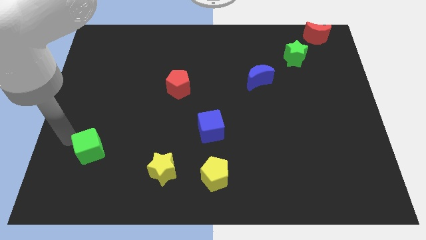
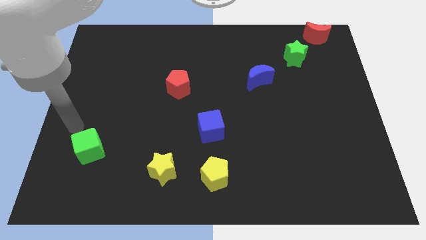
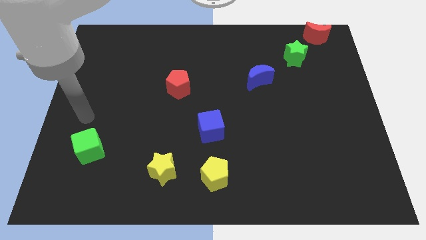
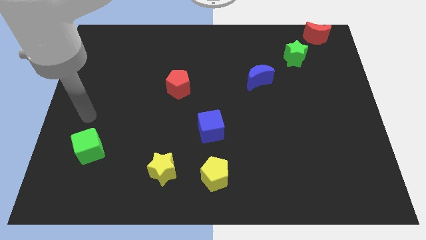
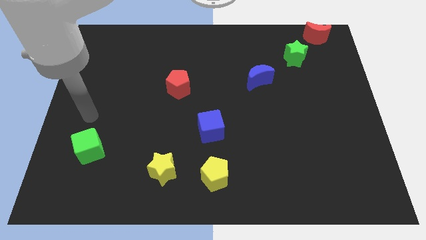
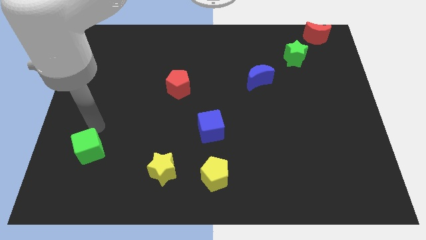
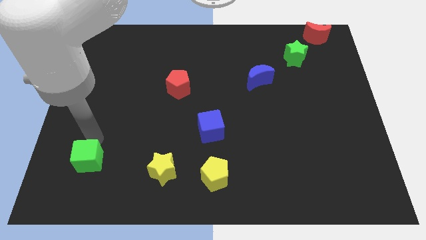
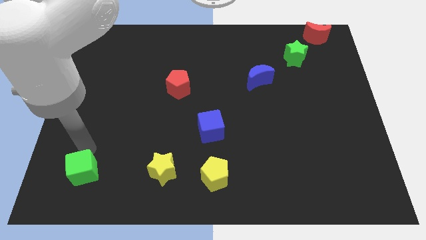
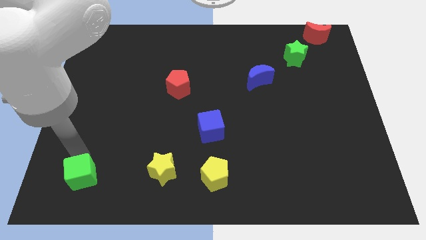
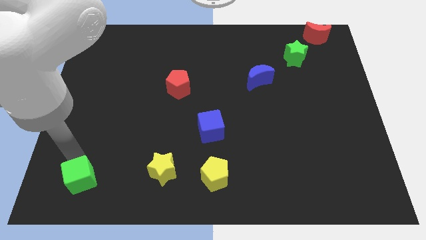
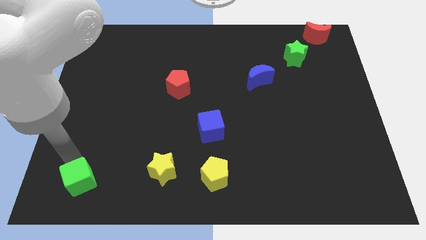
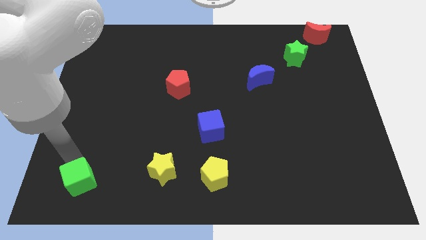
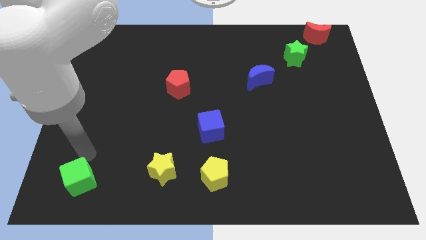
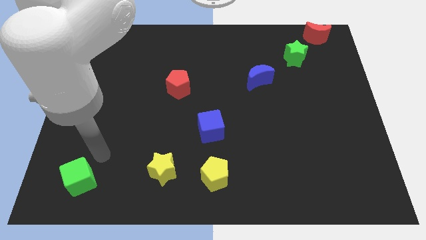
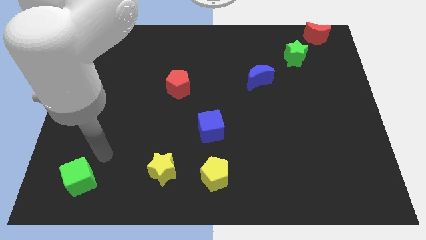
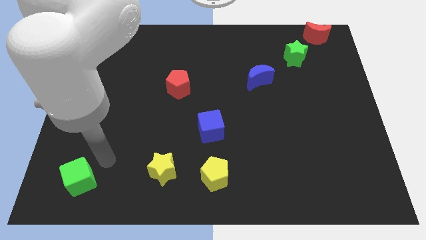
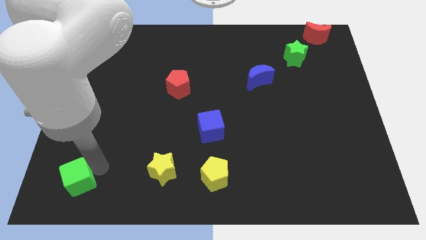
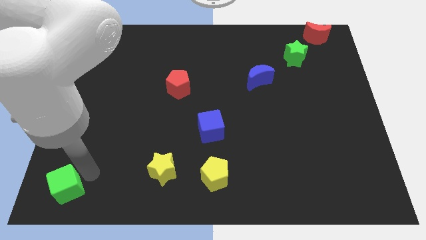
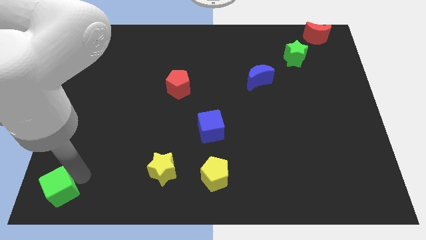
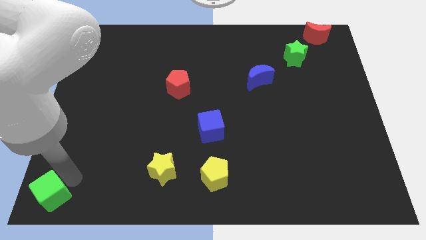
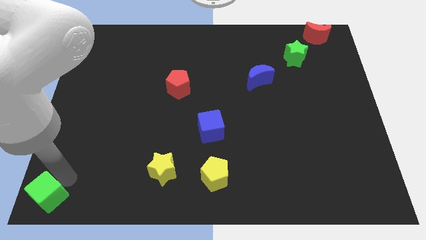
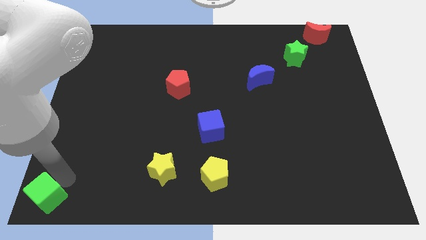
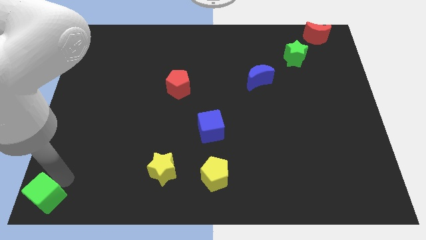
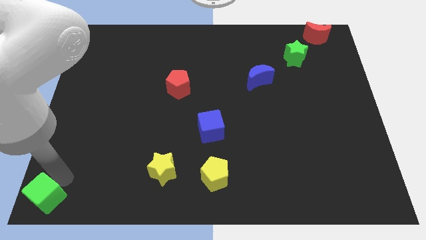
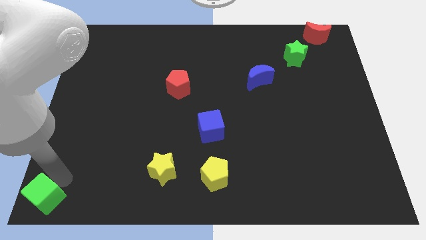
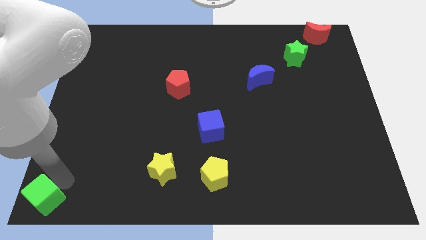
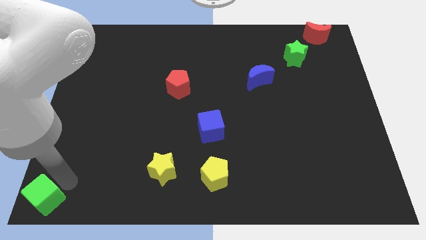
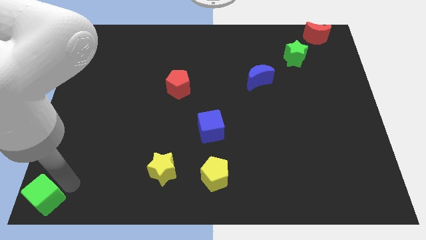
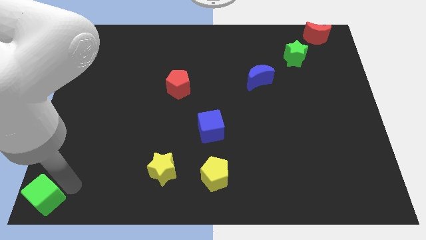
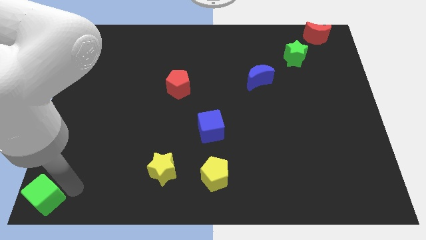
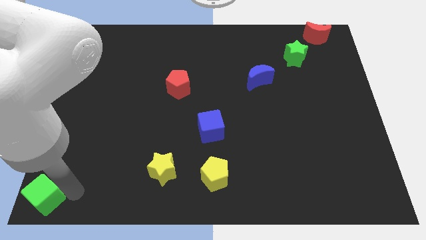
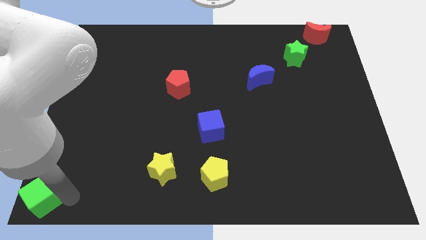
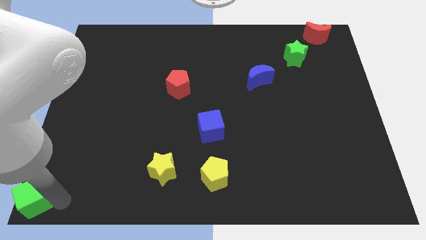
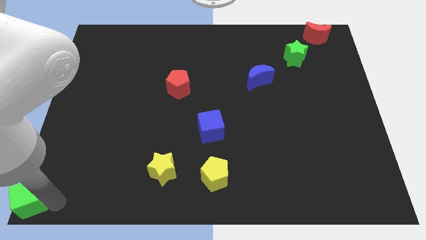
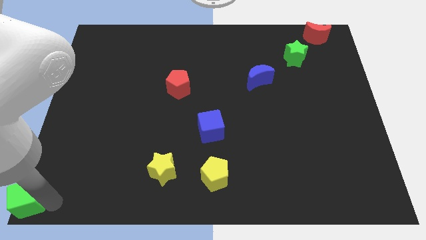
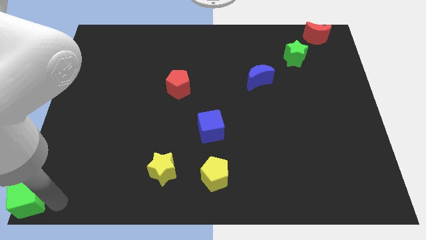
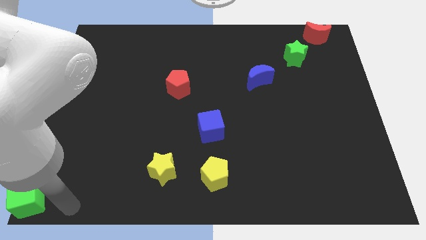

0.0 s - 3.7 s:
put the green cube at the bottom left corner of the board

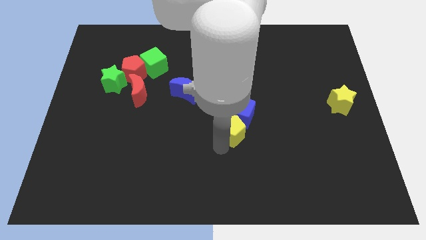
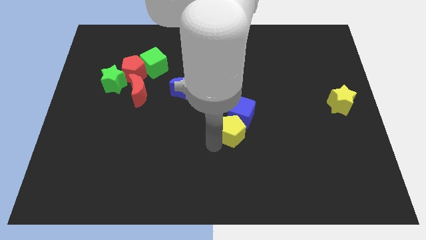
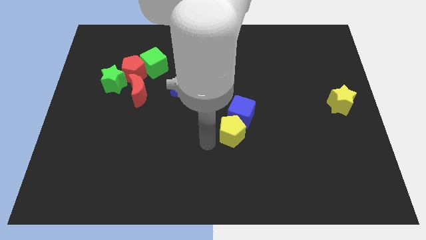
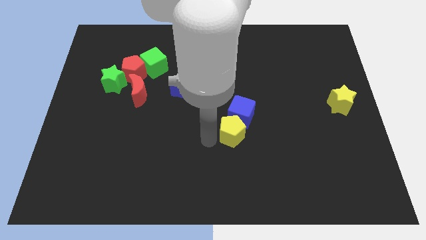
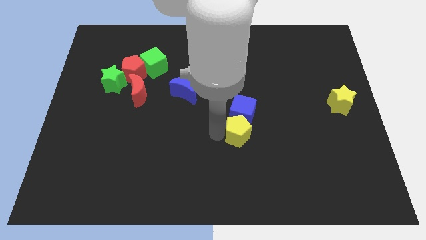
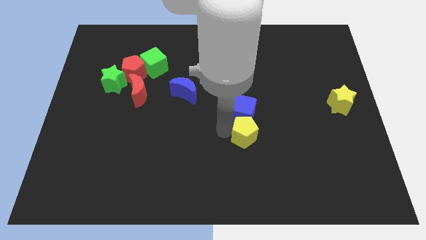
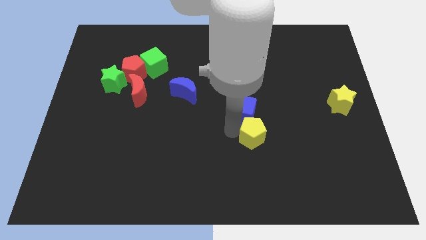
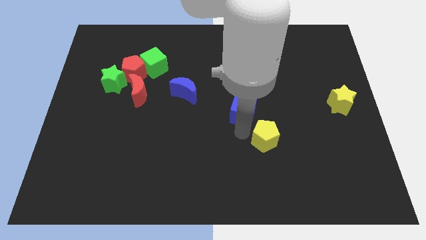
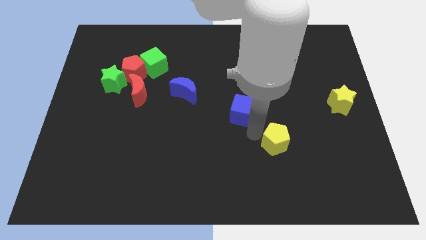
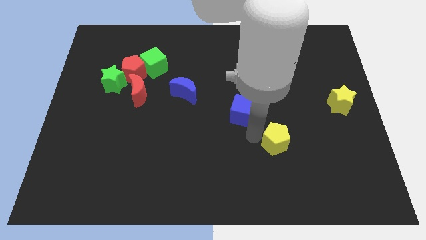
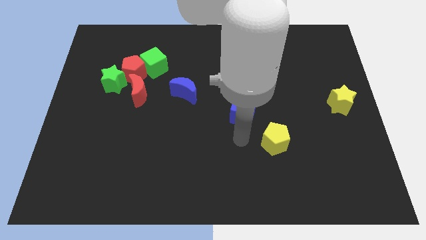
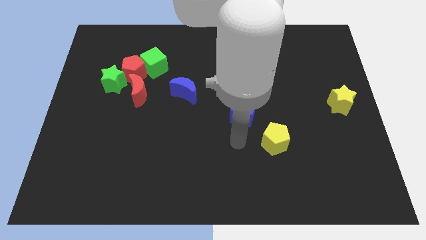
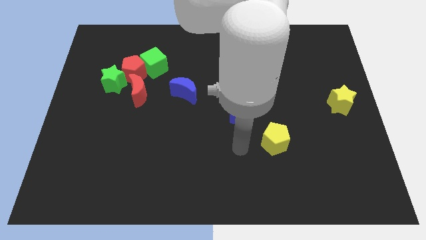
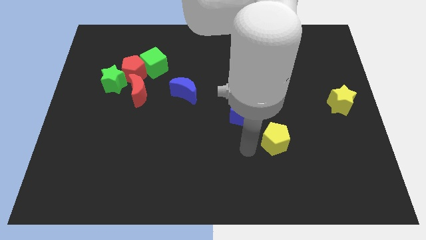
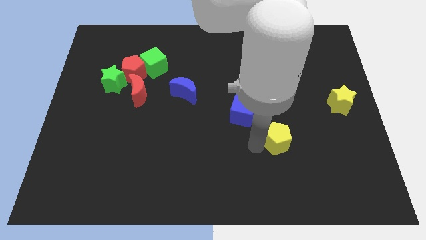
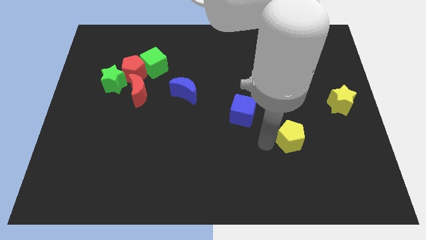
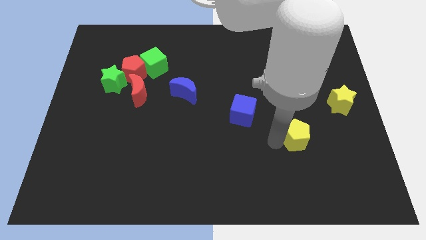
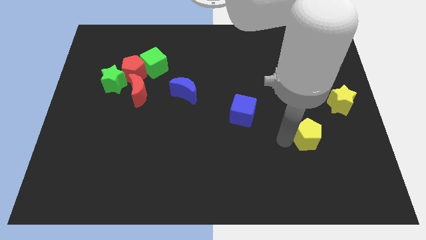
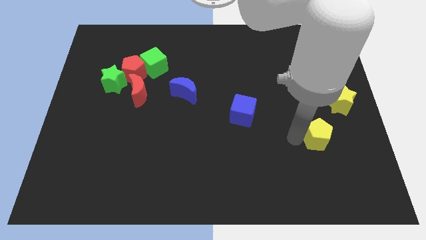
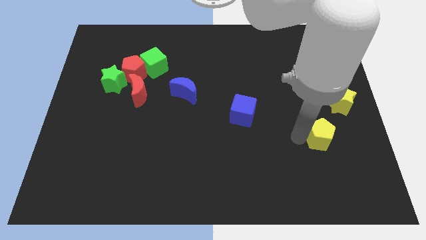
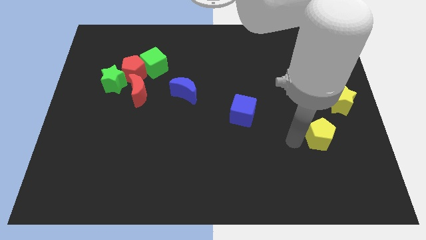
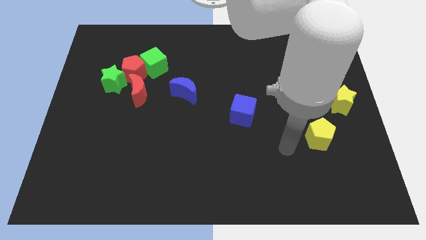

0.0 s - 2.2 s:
separate yellow pentagon from the blue cube

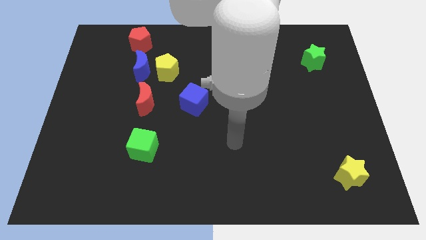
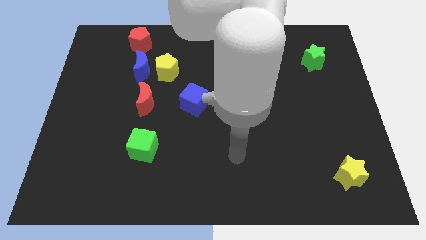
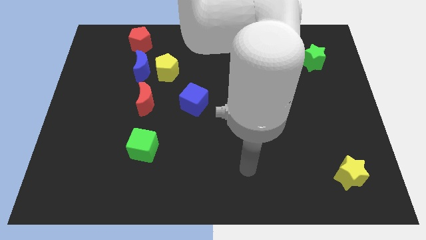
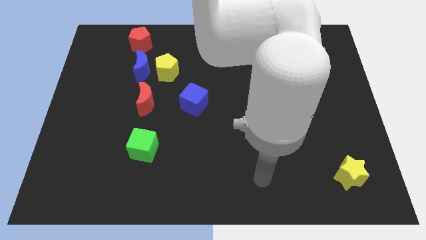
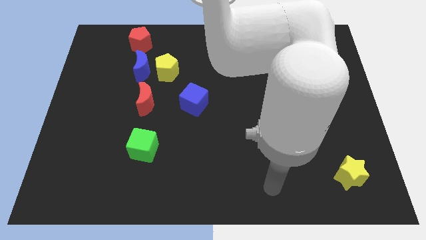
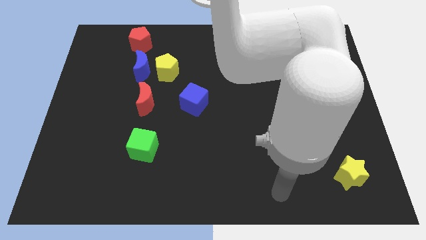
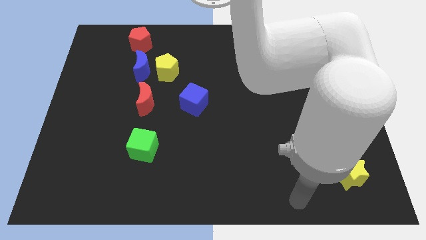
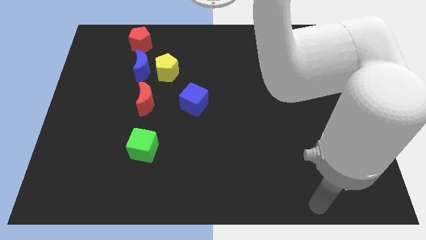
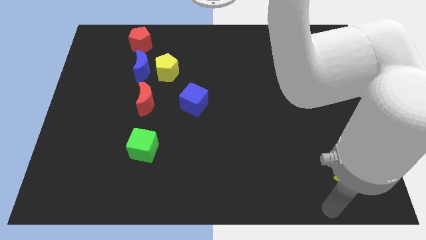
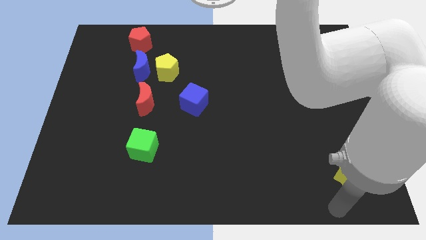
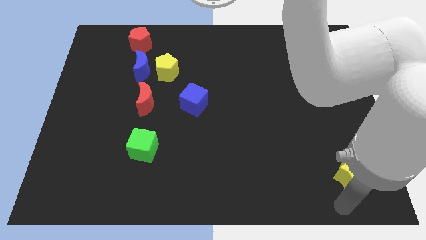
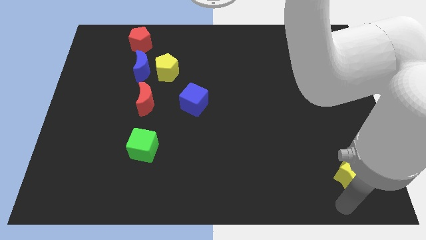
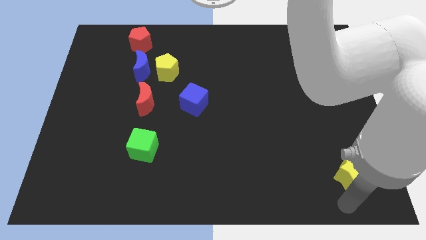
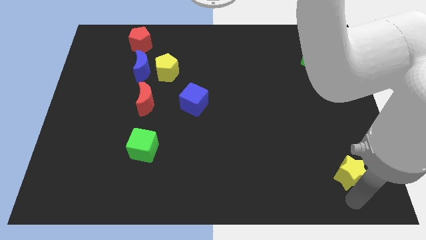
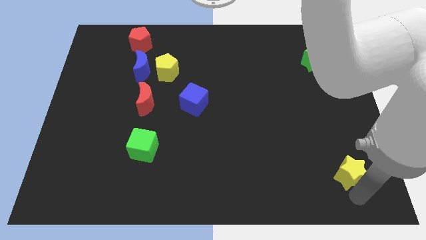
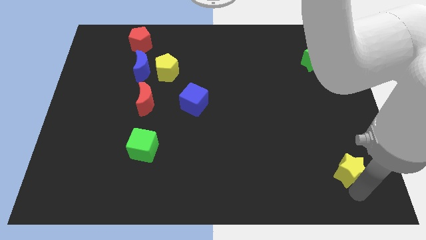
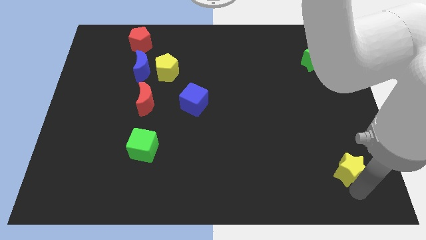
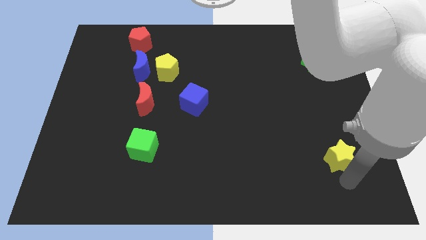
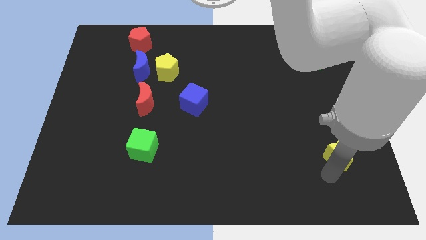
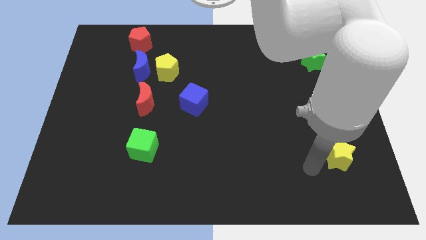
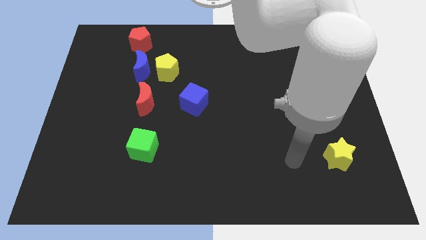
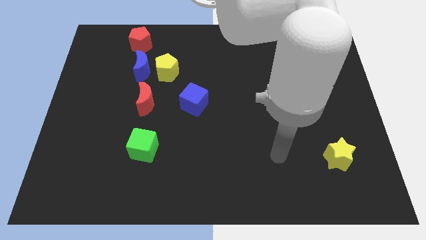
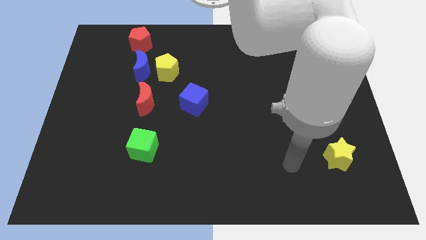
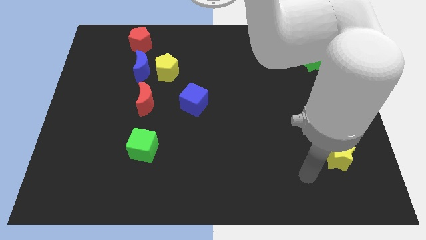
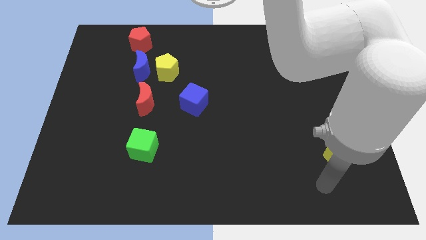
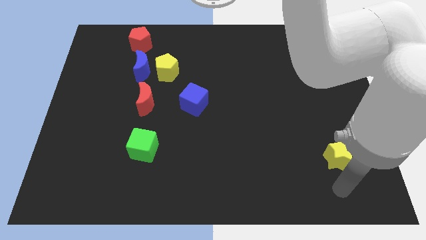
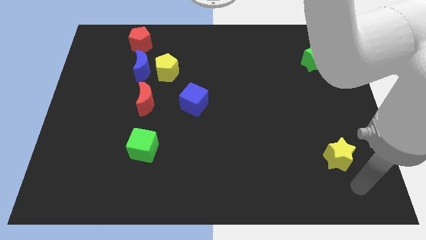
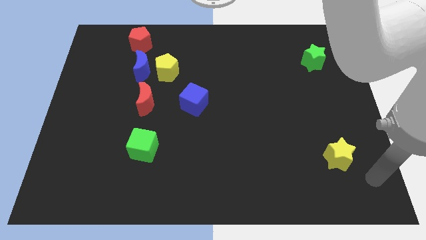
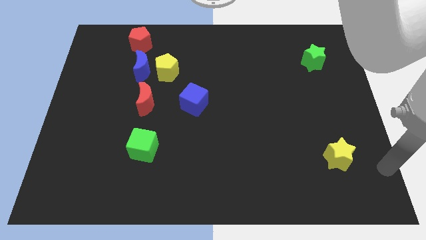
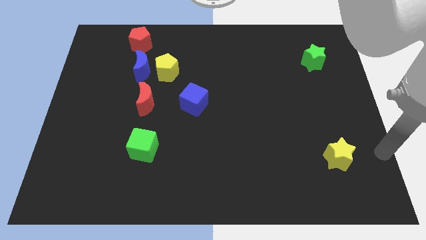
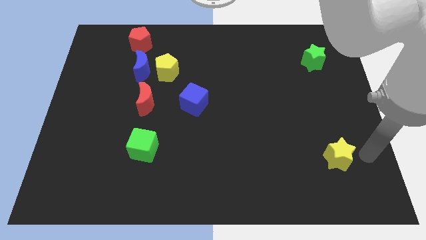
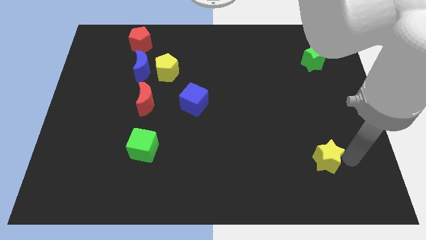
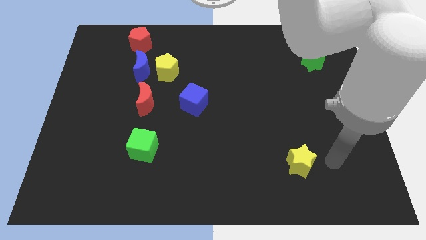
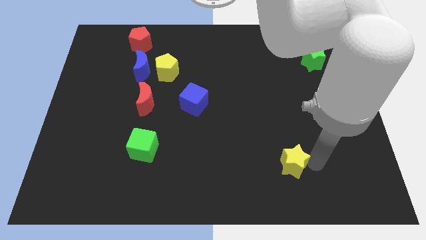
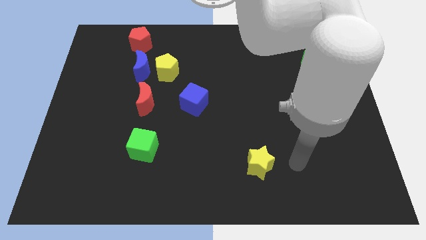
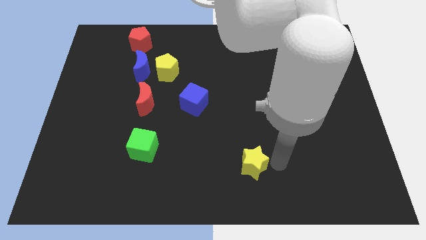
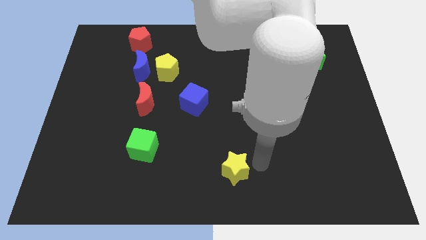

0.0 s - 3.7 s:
move the yellow star to the left of the board
